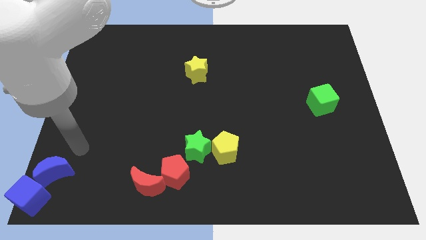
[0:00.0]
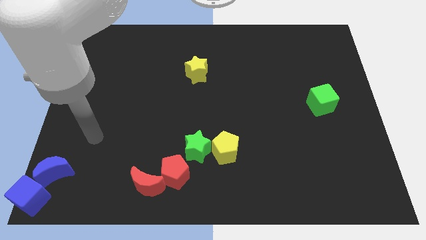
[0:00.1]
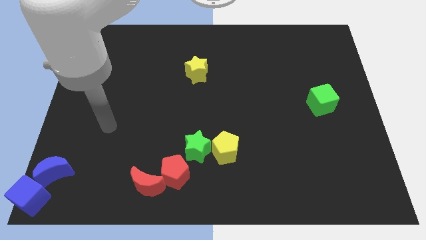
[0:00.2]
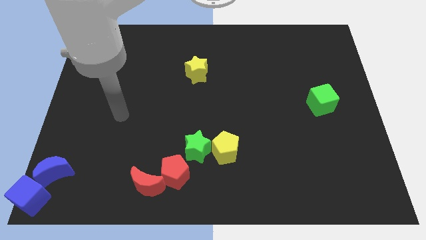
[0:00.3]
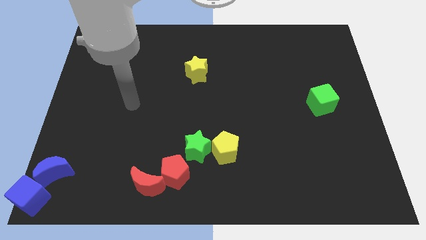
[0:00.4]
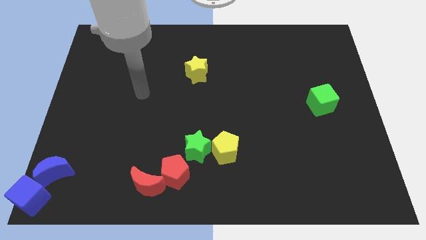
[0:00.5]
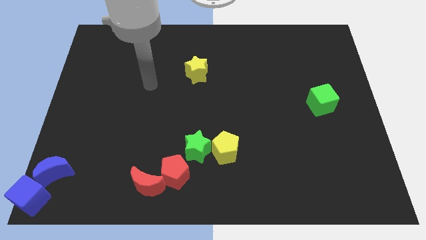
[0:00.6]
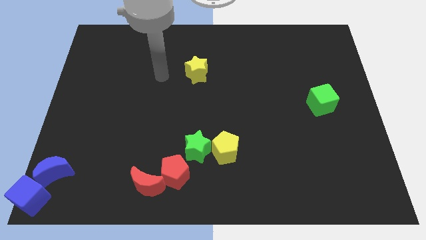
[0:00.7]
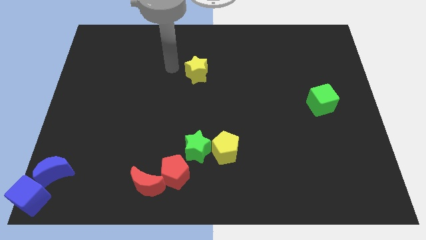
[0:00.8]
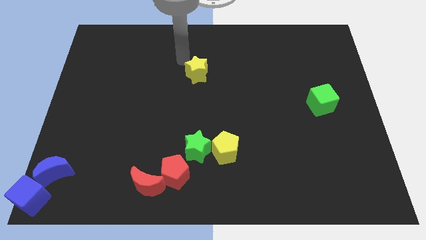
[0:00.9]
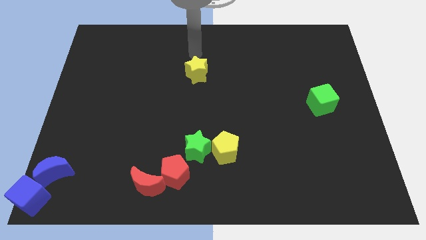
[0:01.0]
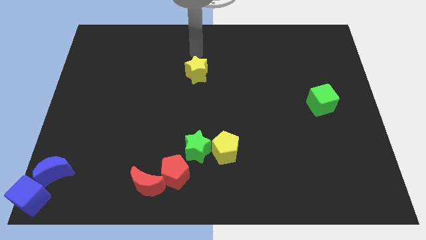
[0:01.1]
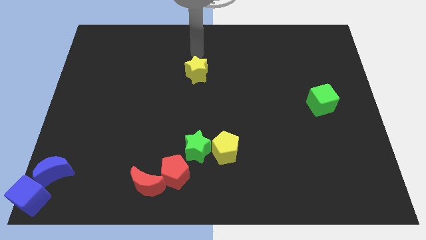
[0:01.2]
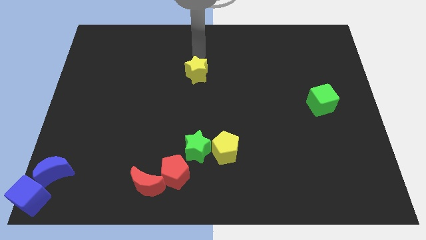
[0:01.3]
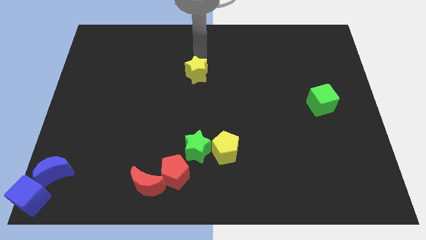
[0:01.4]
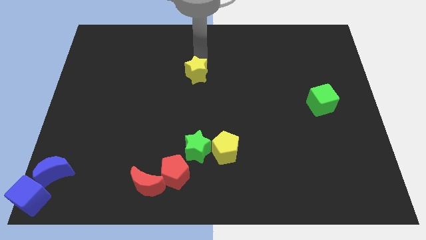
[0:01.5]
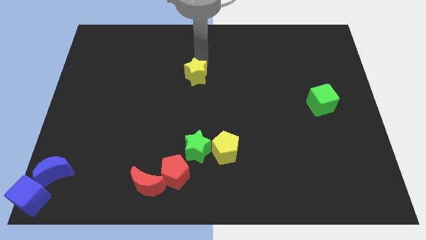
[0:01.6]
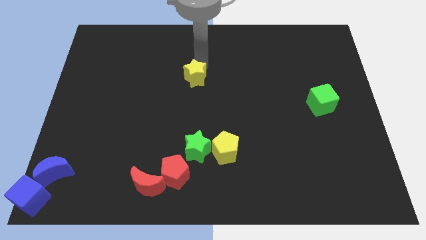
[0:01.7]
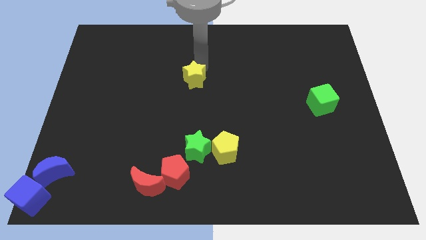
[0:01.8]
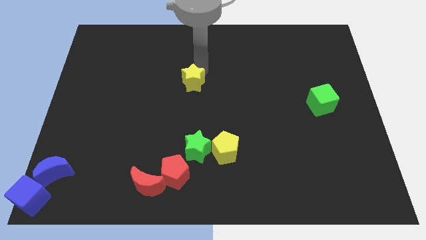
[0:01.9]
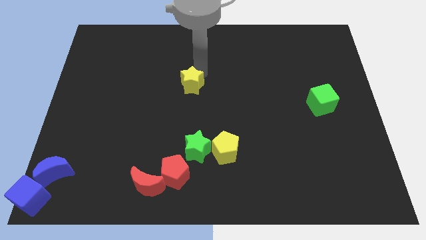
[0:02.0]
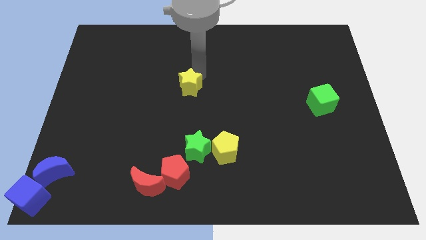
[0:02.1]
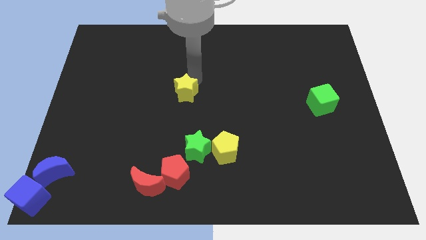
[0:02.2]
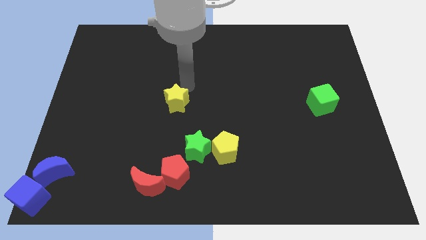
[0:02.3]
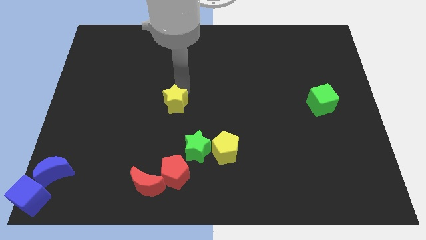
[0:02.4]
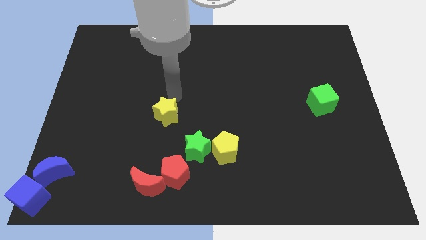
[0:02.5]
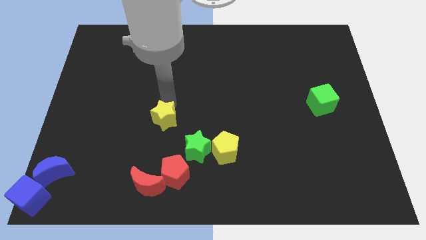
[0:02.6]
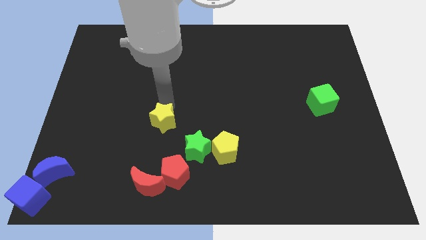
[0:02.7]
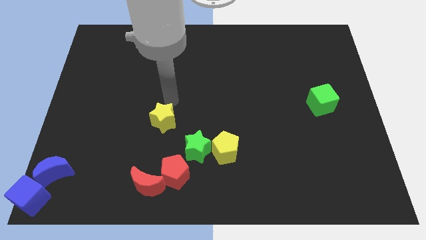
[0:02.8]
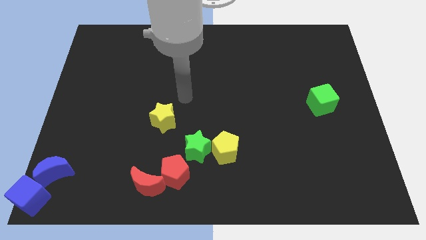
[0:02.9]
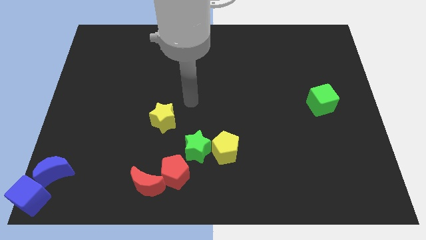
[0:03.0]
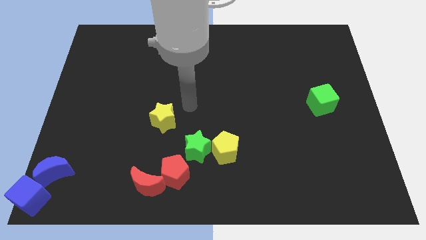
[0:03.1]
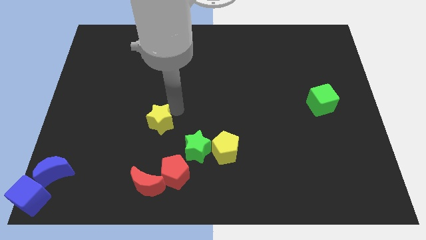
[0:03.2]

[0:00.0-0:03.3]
move the yellow star diagonal to the green star

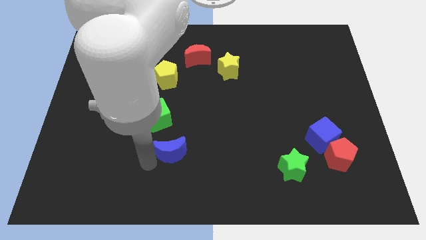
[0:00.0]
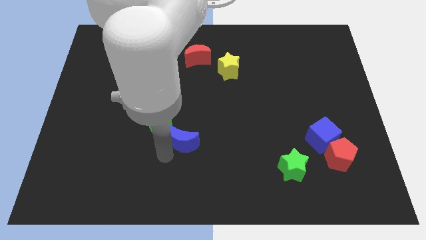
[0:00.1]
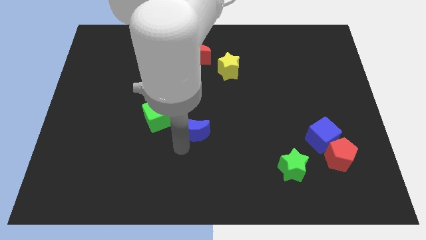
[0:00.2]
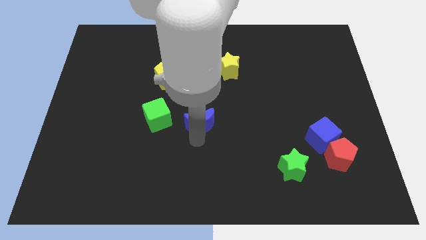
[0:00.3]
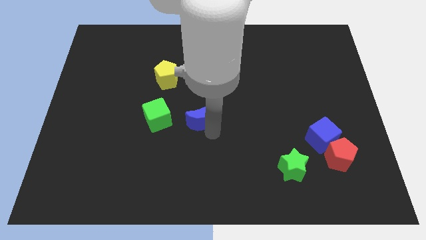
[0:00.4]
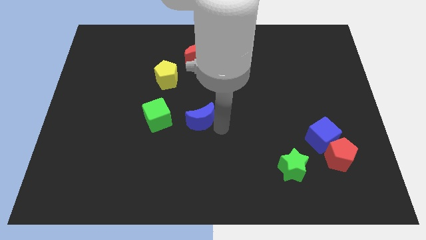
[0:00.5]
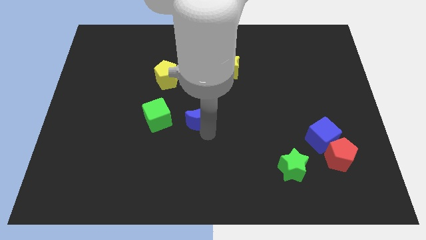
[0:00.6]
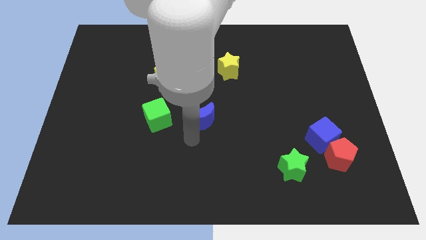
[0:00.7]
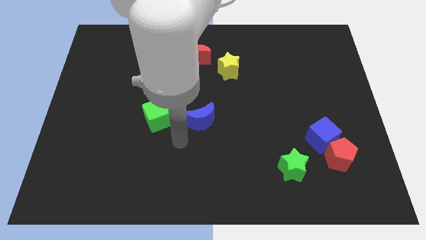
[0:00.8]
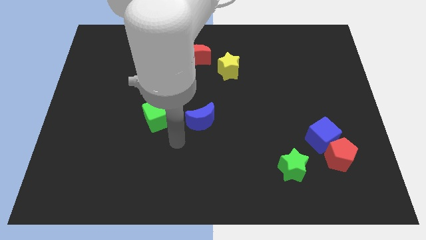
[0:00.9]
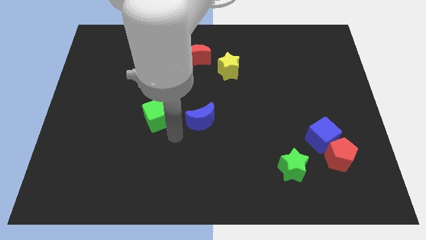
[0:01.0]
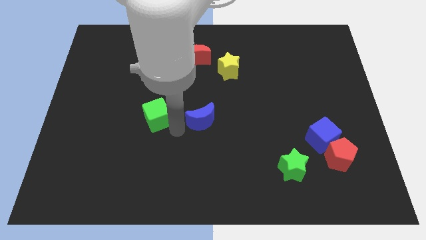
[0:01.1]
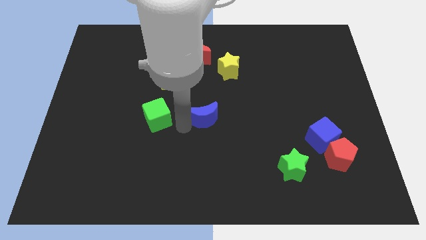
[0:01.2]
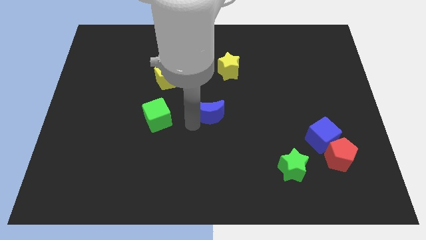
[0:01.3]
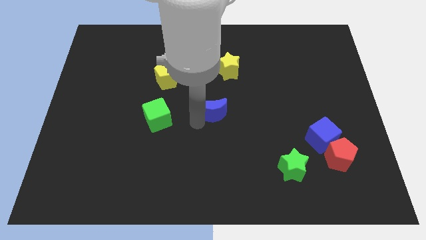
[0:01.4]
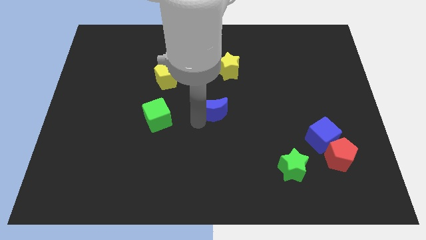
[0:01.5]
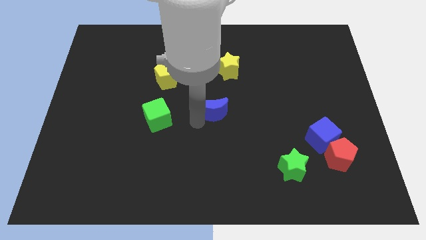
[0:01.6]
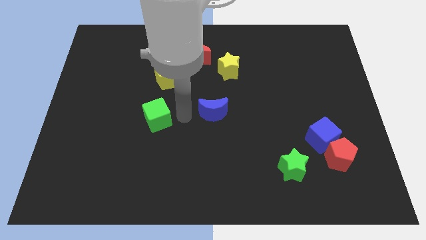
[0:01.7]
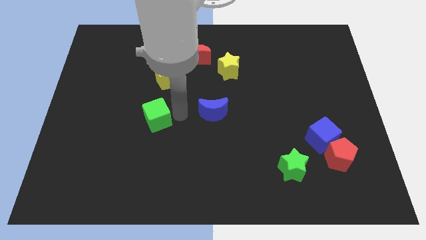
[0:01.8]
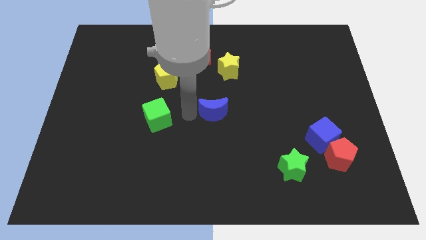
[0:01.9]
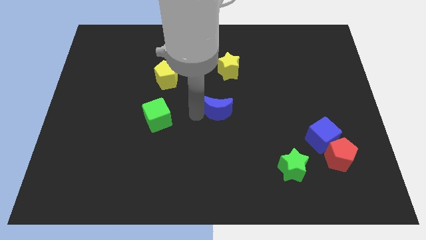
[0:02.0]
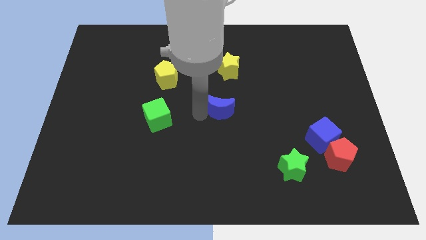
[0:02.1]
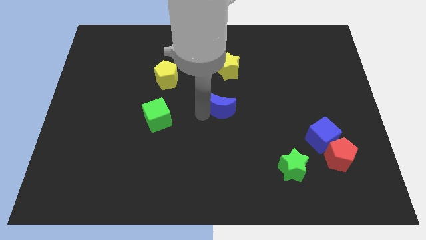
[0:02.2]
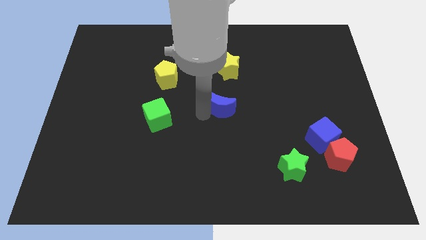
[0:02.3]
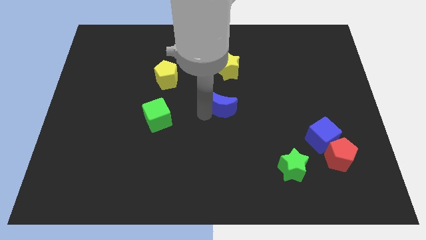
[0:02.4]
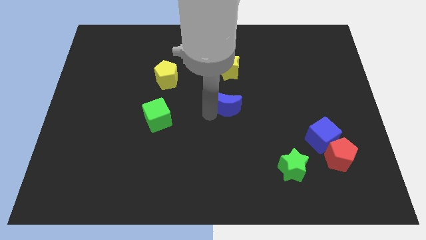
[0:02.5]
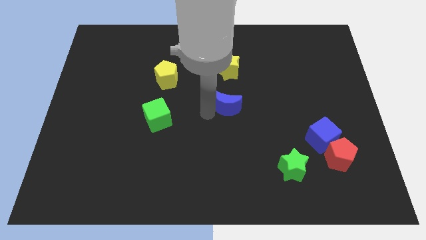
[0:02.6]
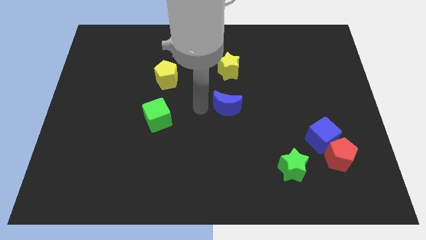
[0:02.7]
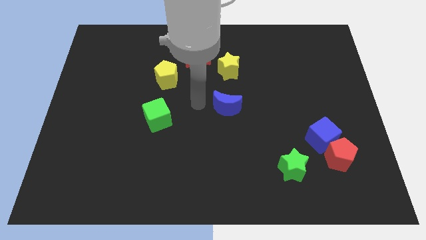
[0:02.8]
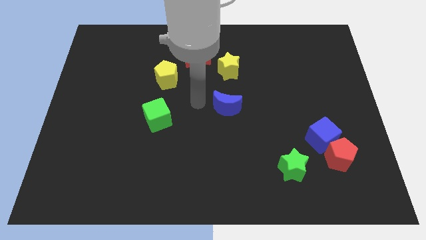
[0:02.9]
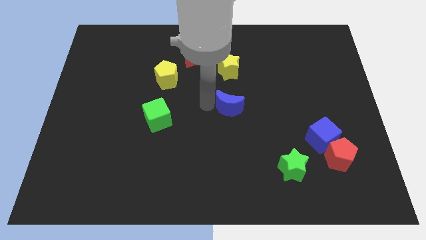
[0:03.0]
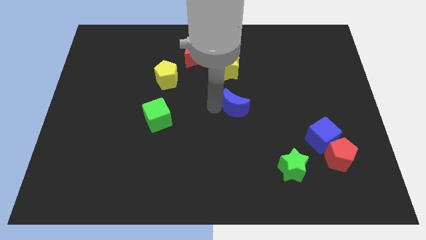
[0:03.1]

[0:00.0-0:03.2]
move the blue crescent to the center of the board

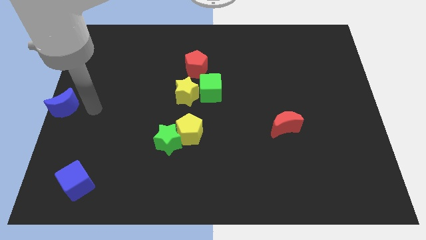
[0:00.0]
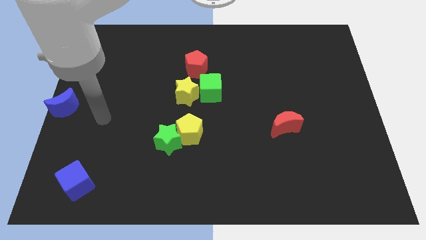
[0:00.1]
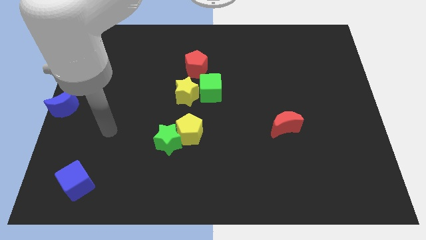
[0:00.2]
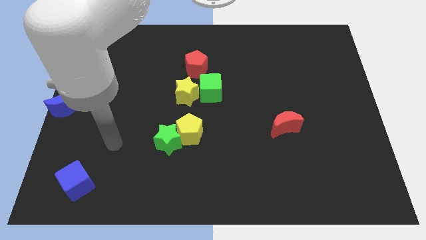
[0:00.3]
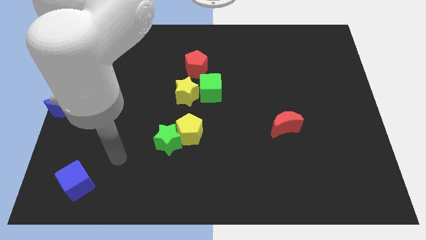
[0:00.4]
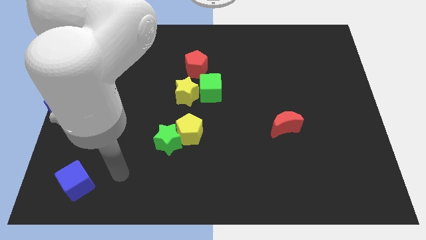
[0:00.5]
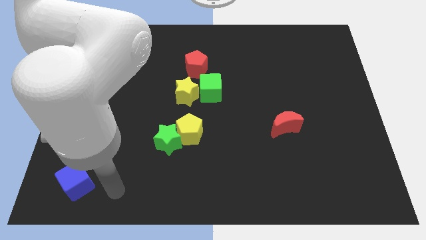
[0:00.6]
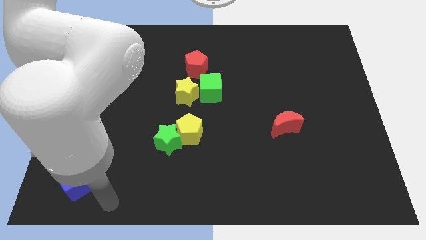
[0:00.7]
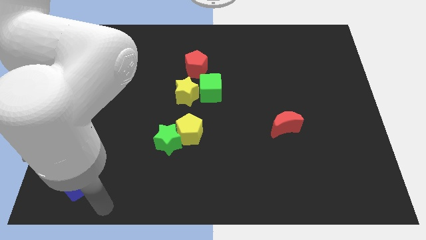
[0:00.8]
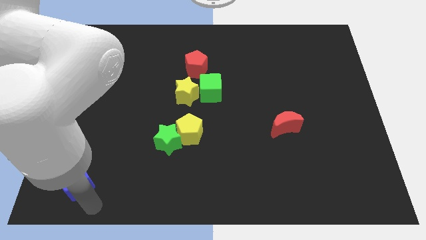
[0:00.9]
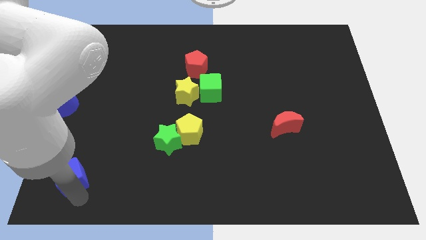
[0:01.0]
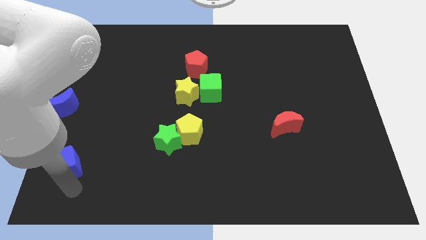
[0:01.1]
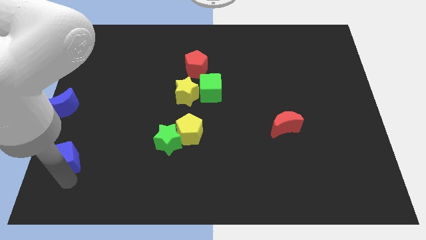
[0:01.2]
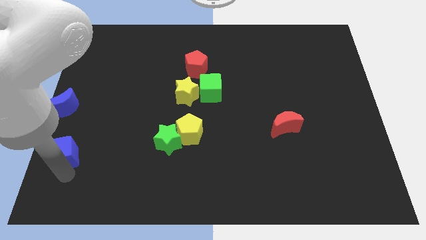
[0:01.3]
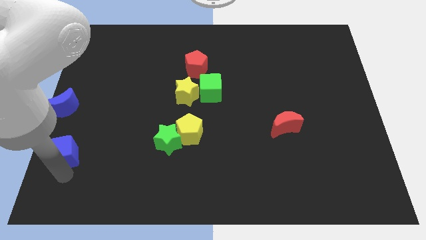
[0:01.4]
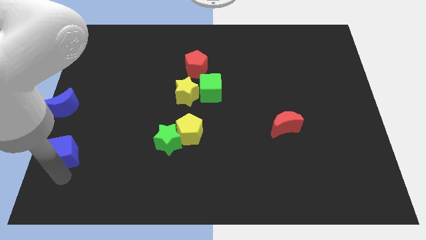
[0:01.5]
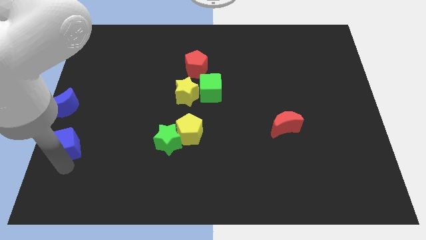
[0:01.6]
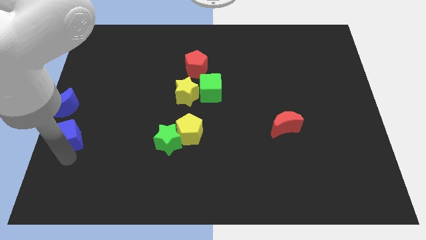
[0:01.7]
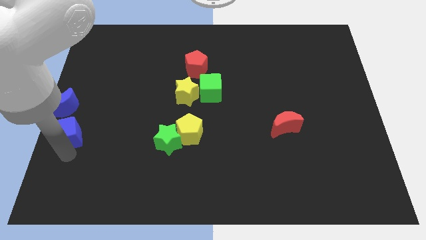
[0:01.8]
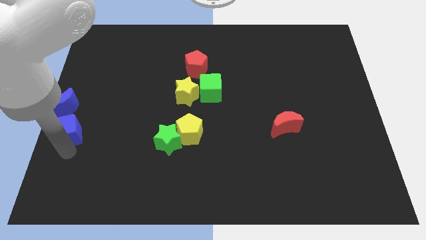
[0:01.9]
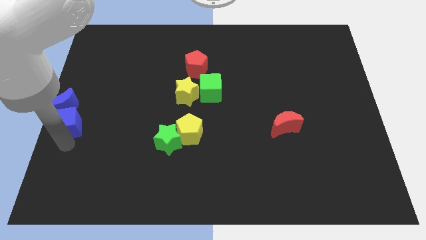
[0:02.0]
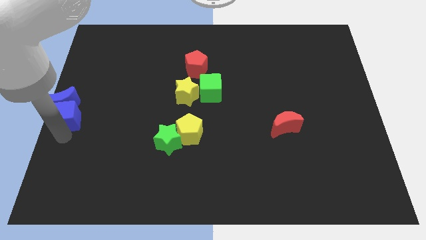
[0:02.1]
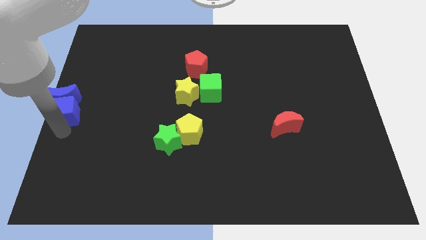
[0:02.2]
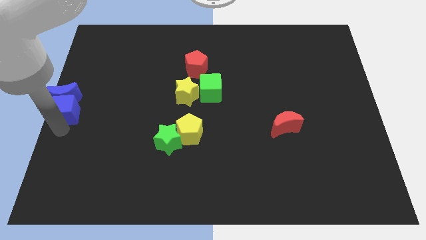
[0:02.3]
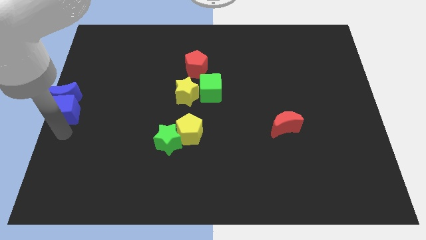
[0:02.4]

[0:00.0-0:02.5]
move the blue cube to the bottom of the blue crescent
